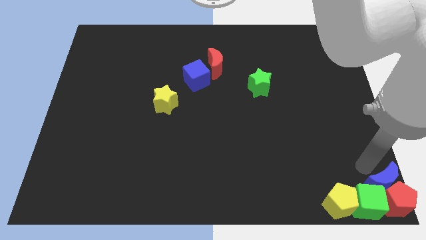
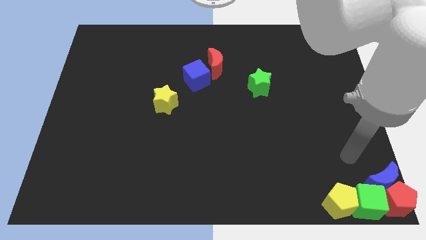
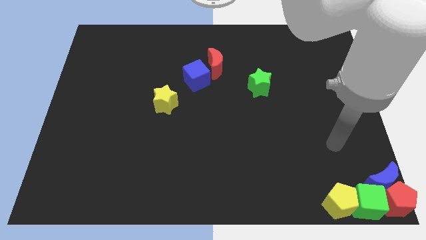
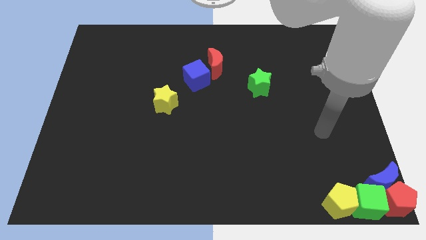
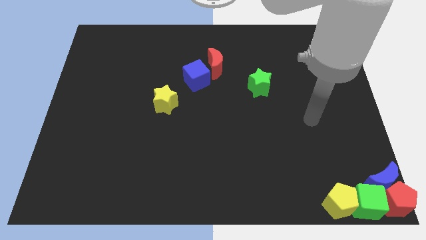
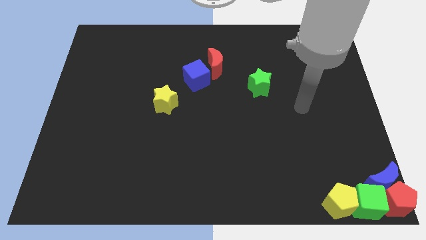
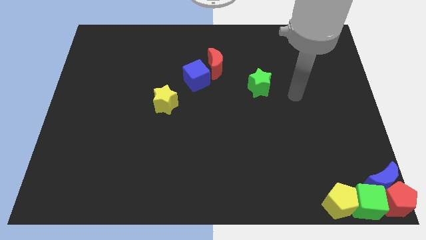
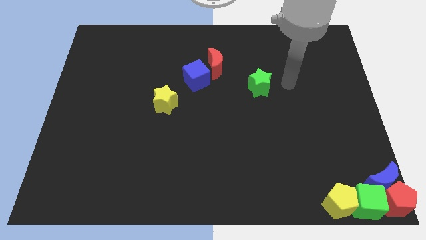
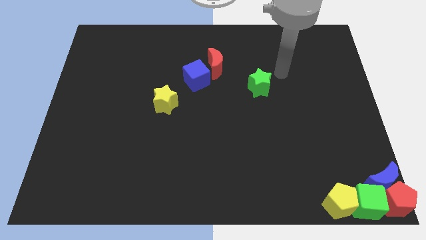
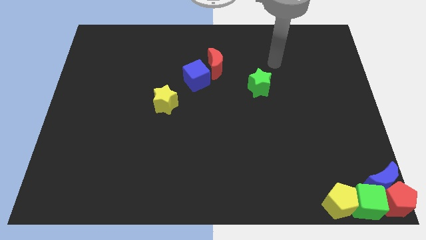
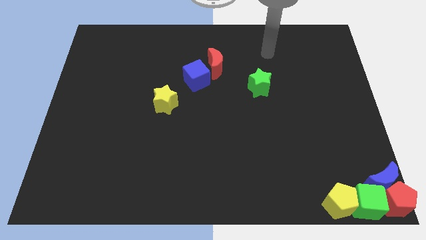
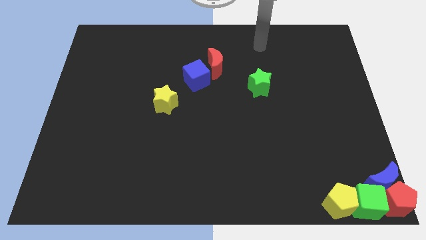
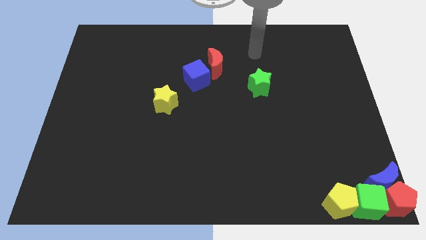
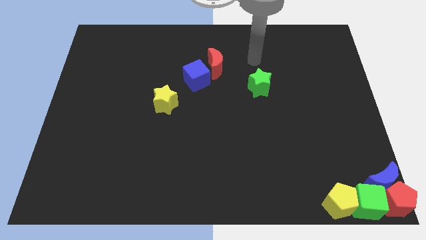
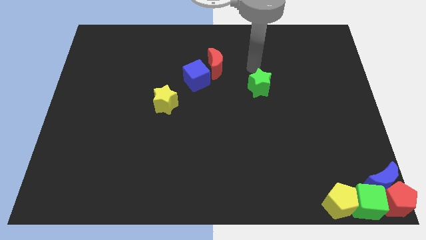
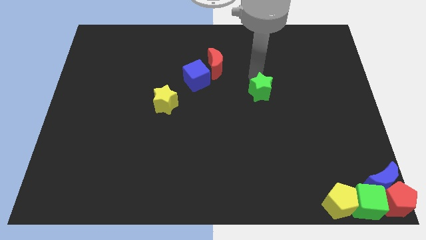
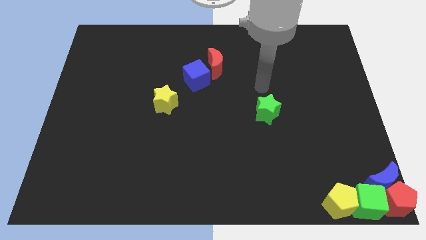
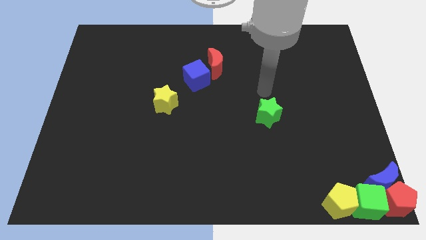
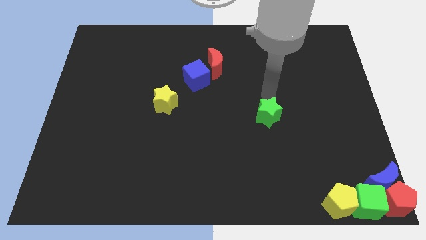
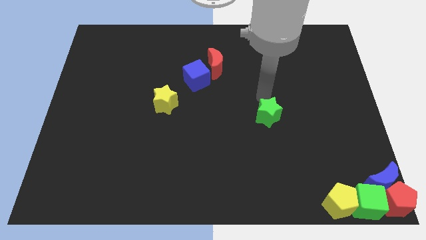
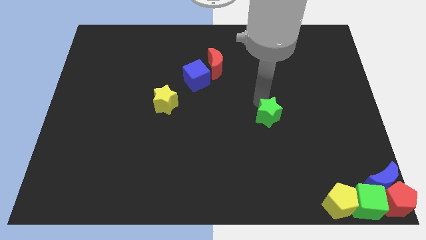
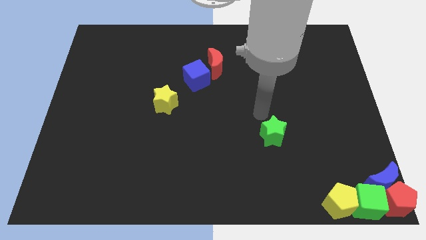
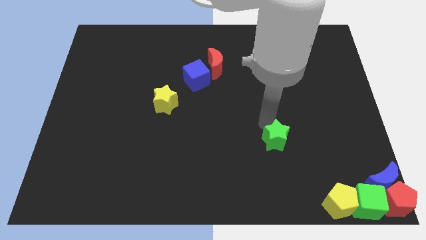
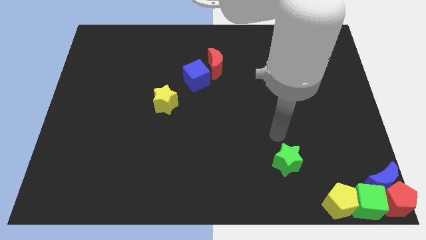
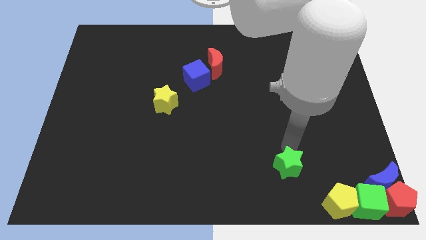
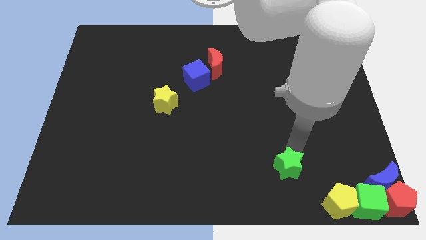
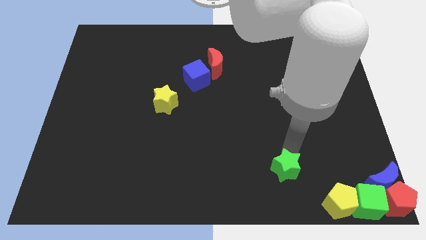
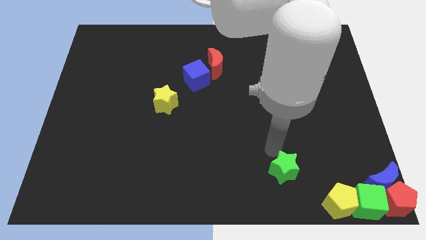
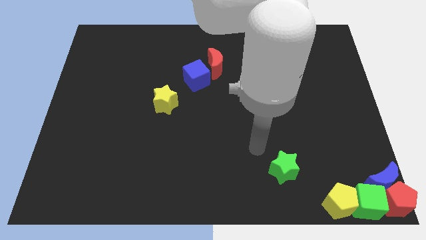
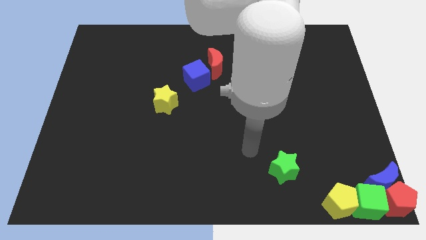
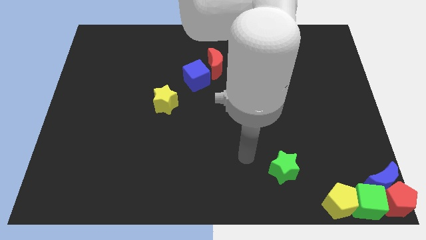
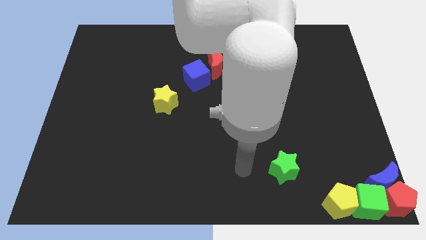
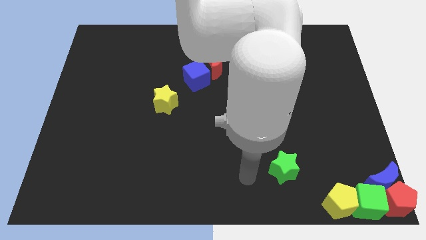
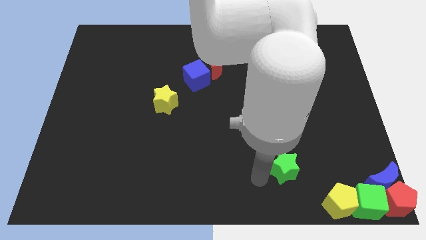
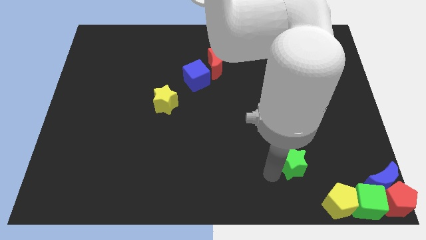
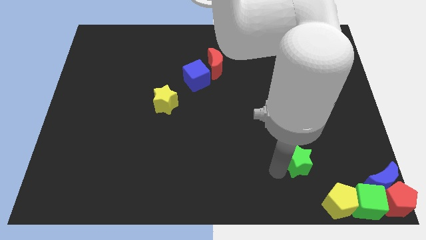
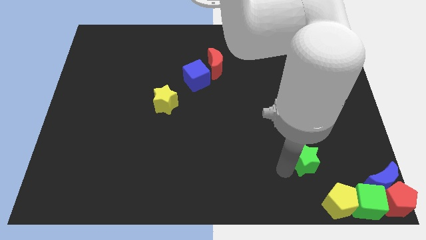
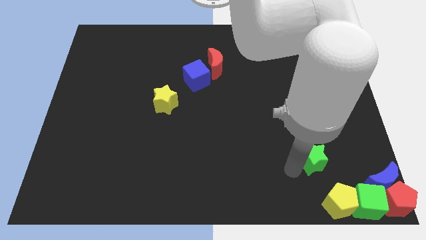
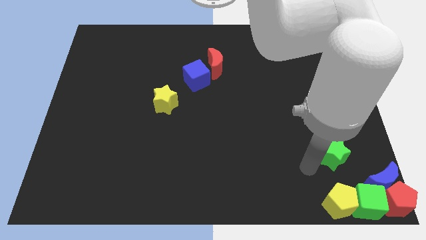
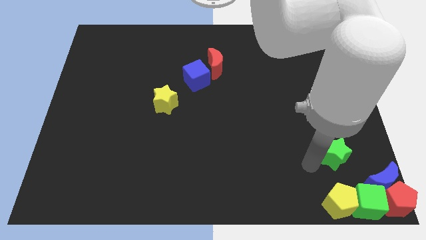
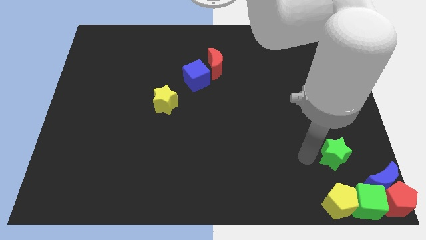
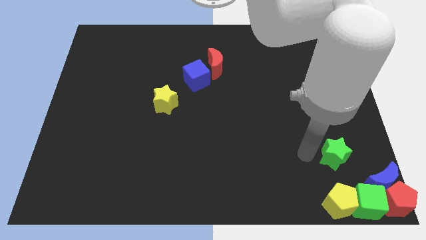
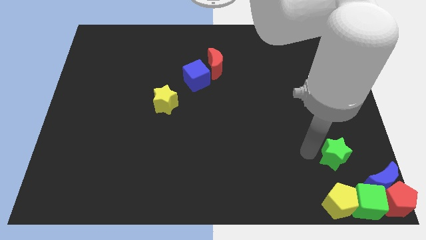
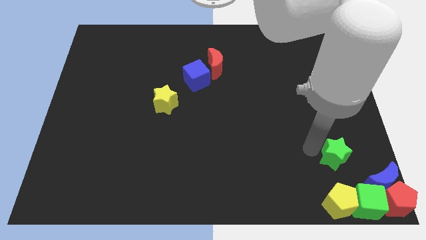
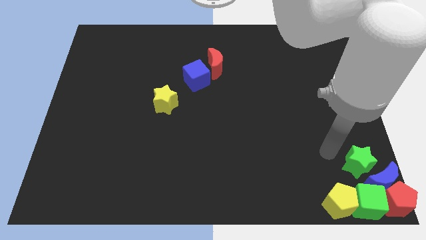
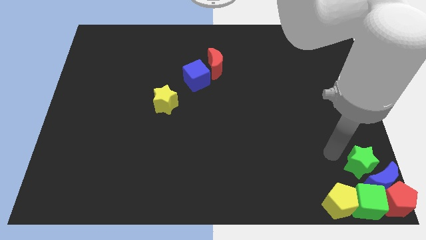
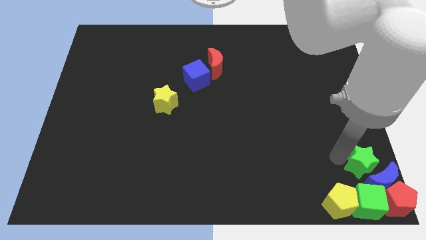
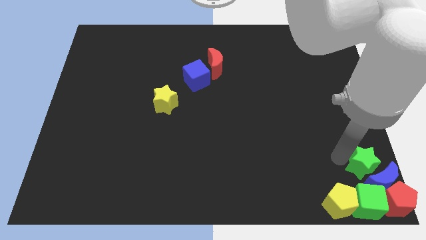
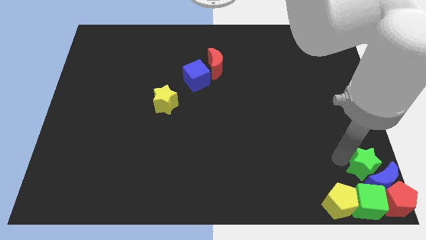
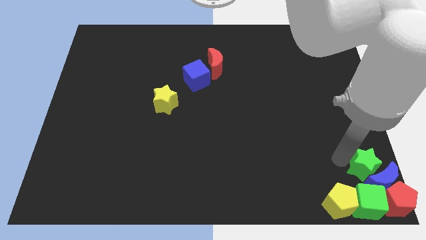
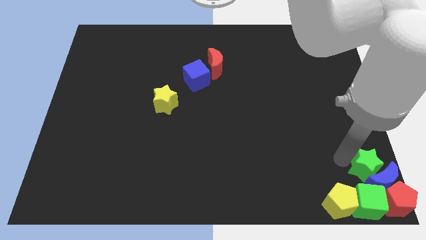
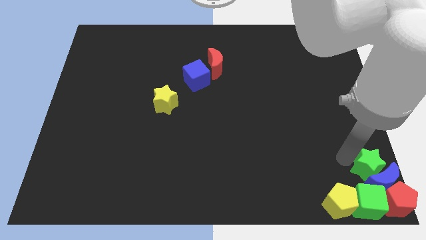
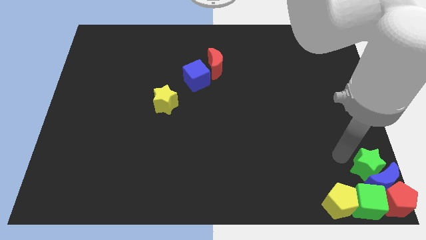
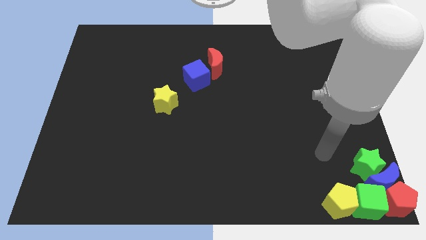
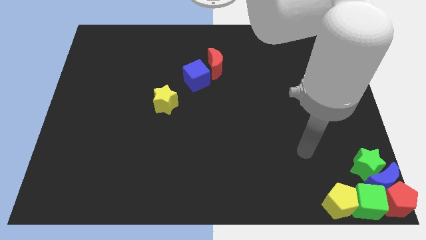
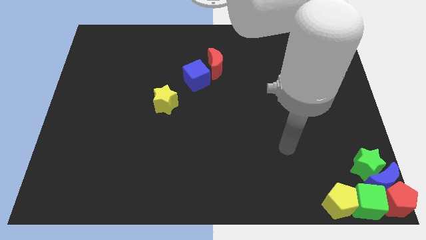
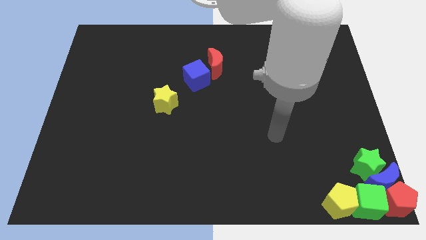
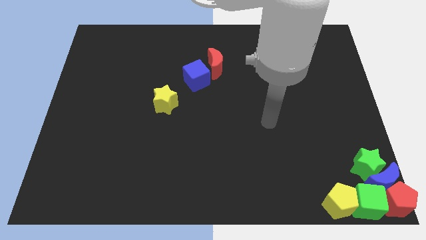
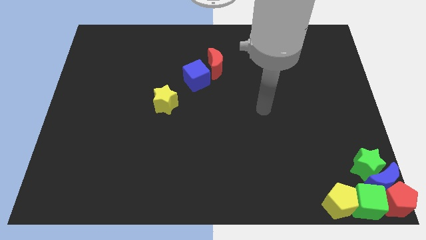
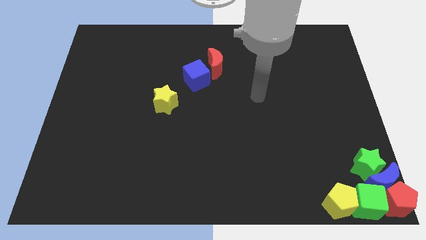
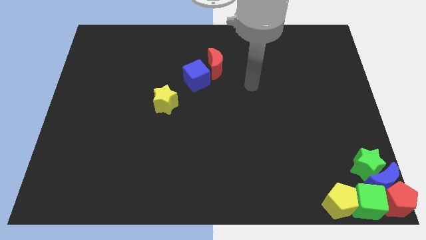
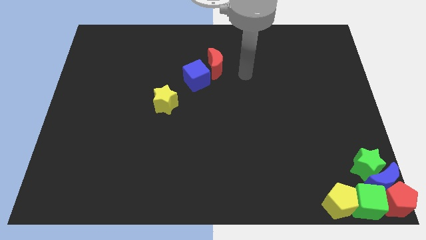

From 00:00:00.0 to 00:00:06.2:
push green star into the group of blocks

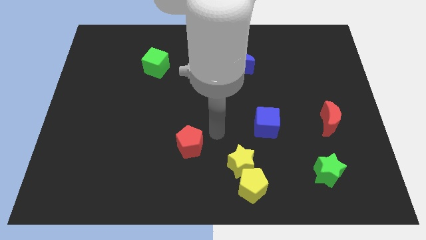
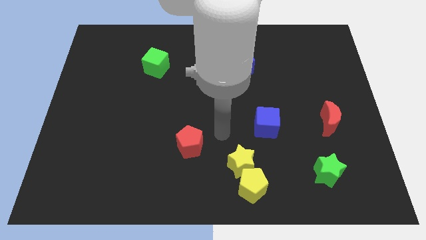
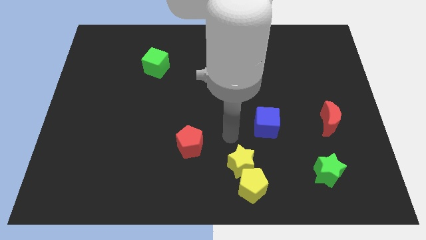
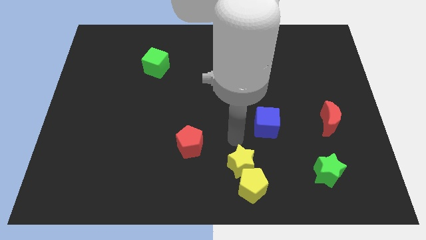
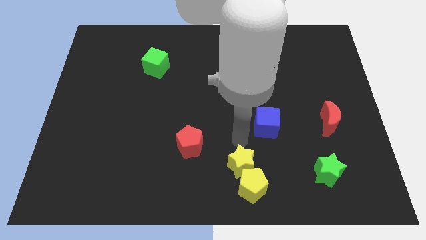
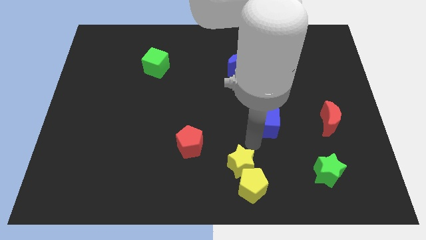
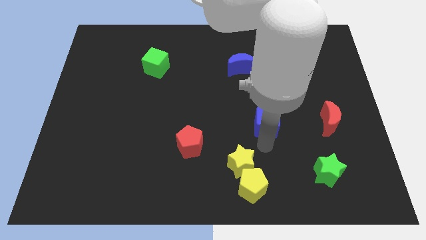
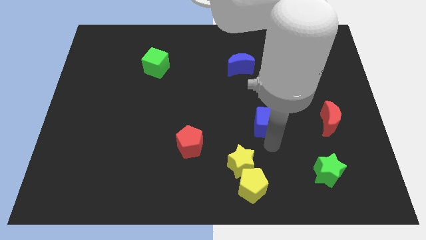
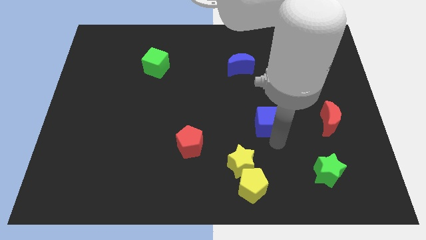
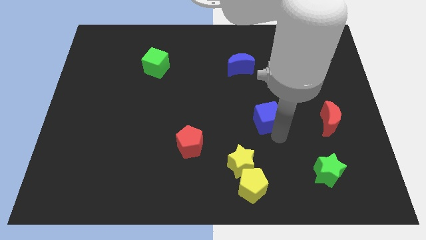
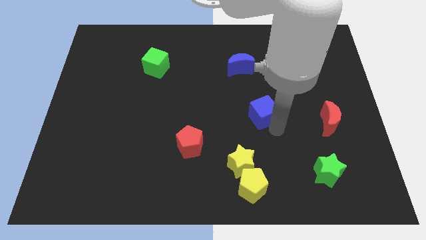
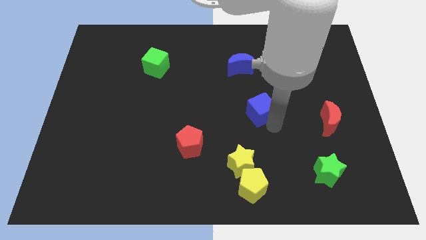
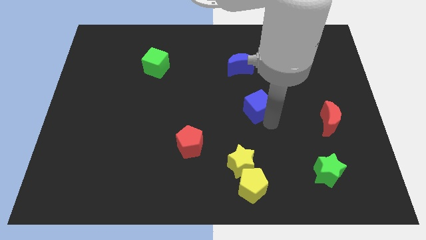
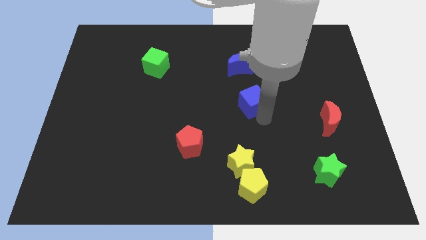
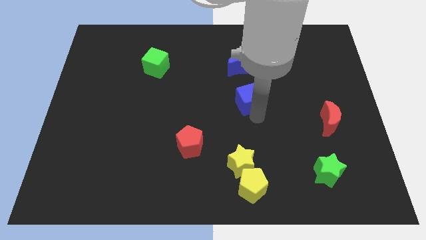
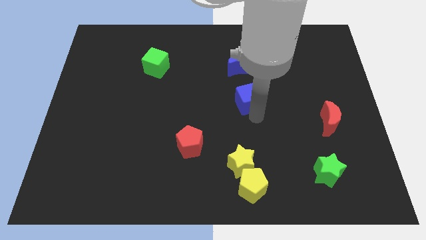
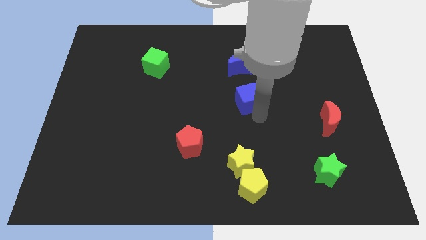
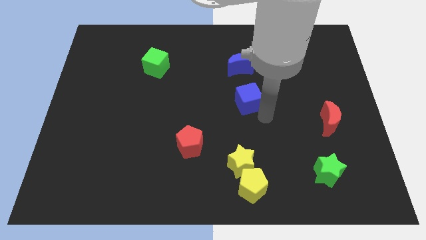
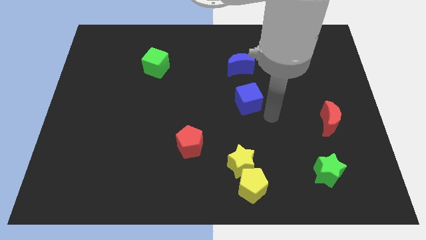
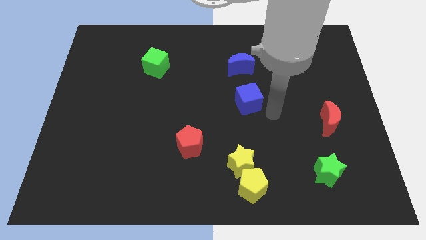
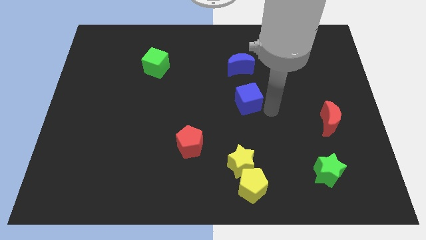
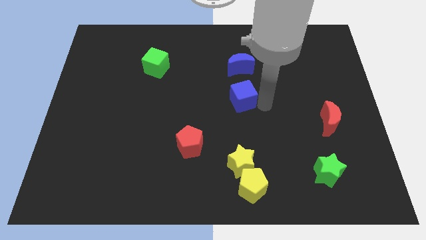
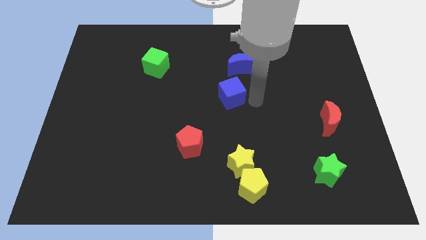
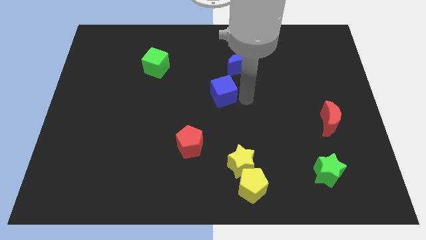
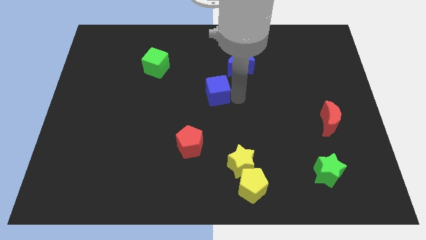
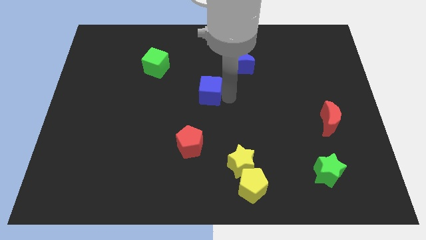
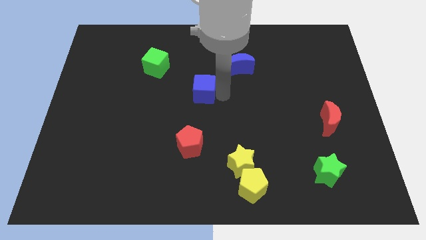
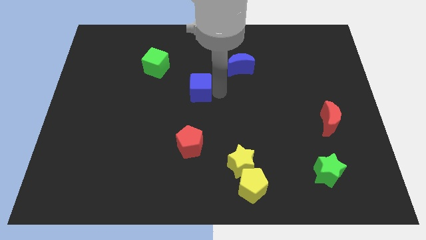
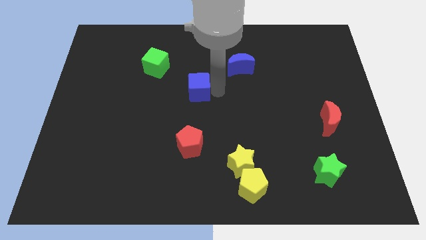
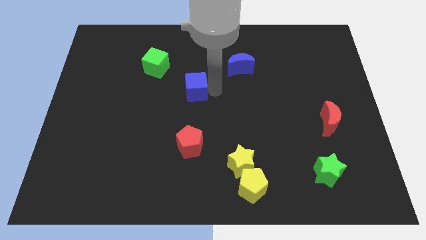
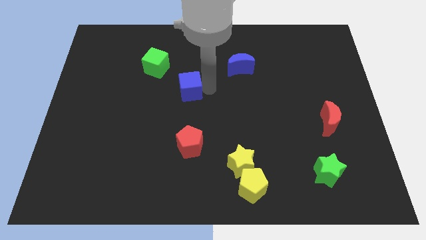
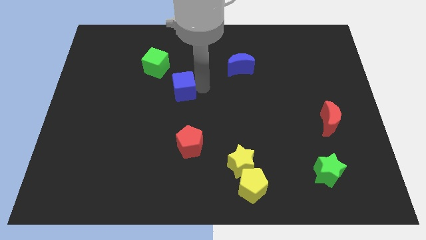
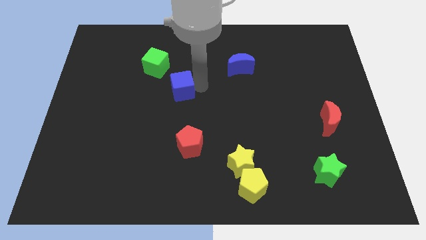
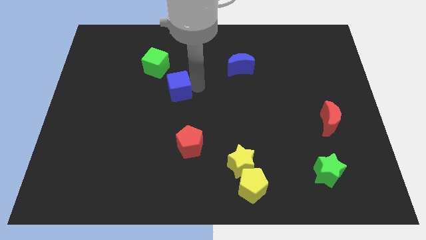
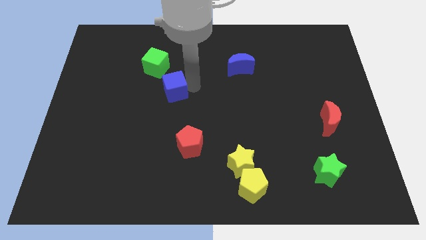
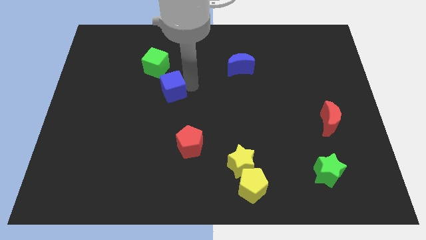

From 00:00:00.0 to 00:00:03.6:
push the blue cube towards the green cube
